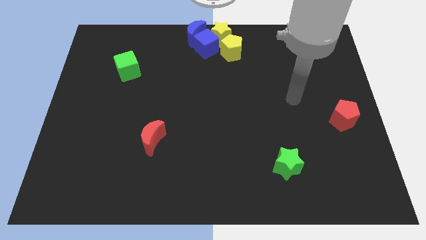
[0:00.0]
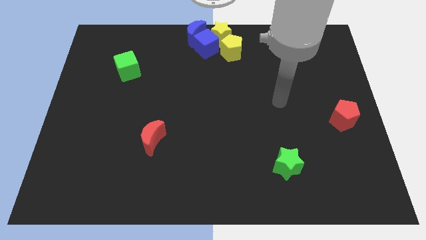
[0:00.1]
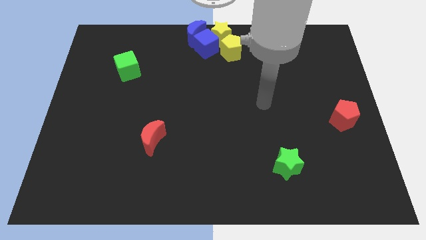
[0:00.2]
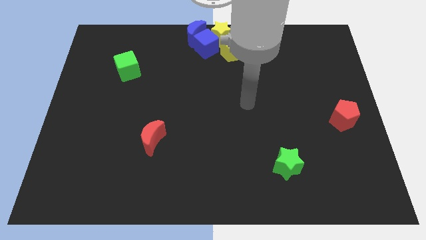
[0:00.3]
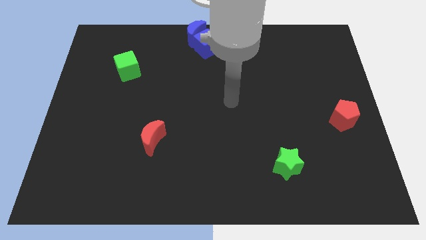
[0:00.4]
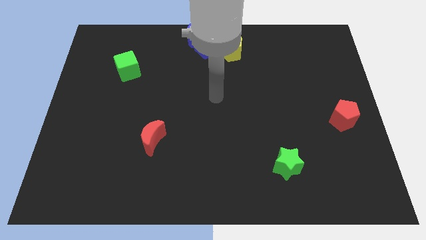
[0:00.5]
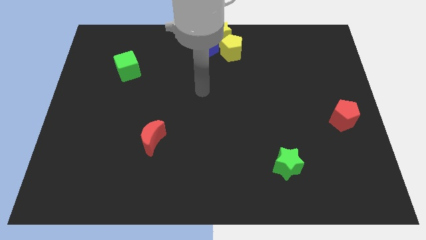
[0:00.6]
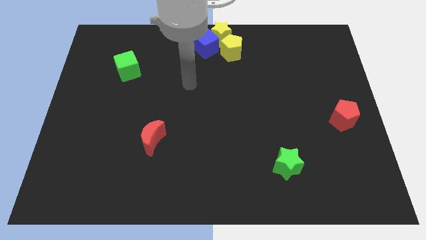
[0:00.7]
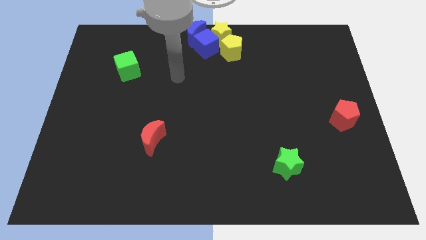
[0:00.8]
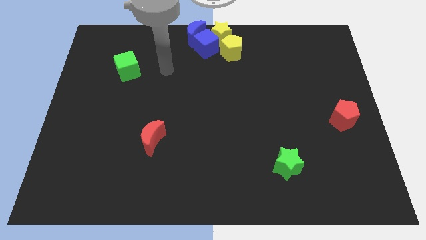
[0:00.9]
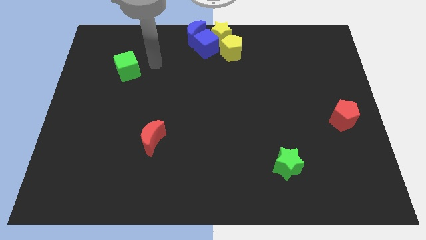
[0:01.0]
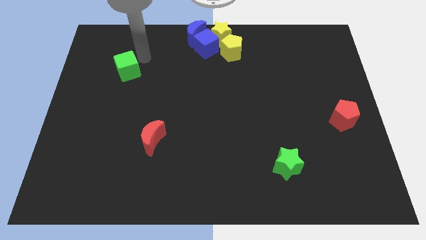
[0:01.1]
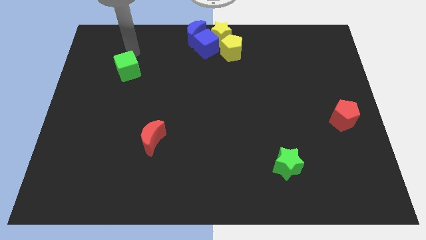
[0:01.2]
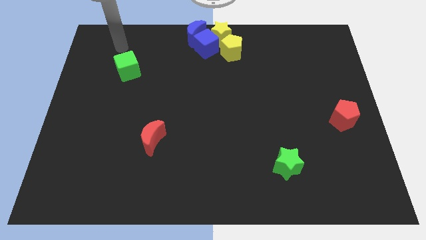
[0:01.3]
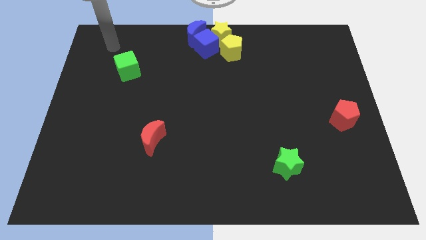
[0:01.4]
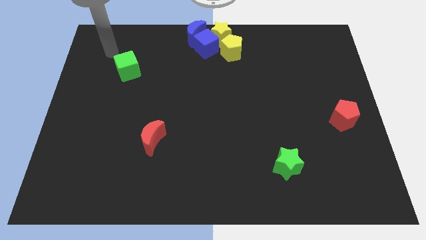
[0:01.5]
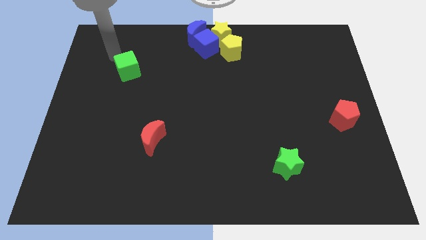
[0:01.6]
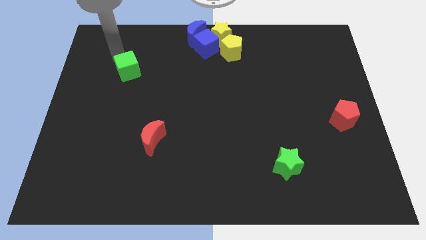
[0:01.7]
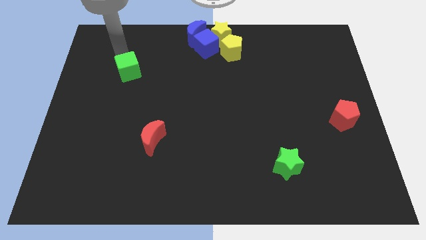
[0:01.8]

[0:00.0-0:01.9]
move your arm towards the green cube

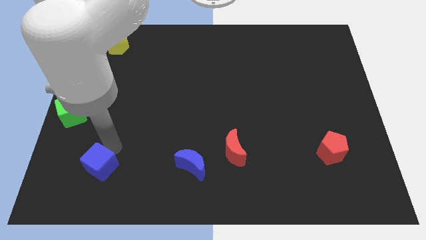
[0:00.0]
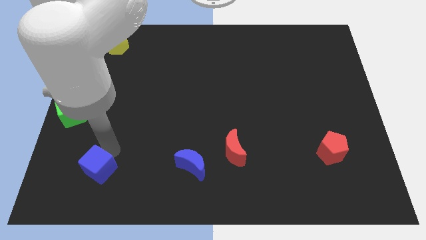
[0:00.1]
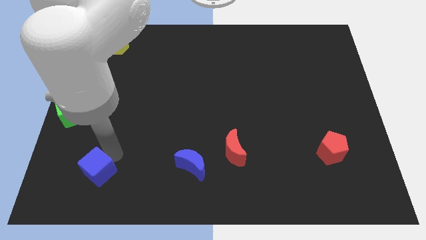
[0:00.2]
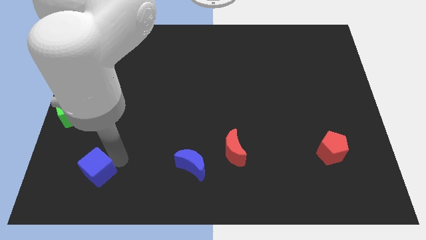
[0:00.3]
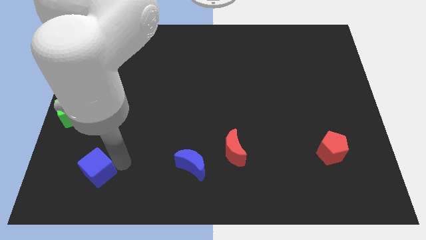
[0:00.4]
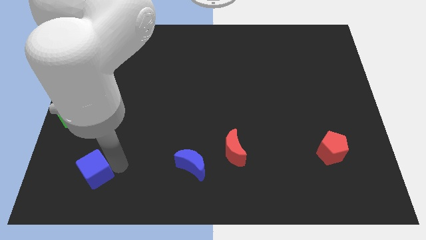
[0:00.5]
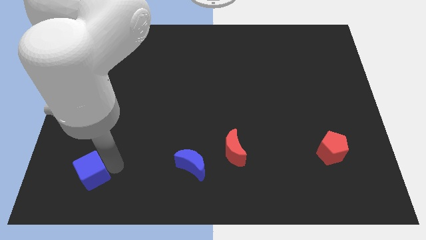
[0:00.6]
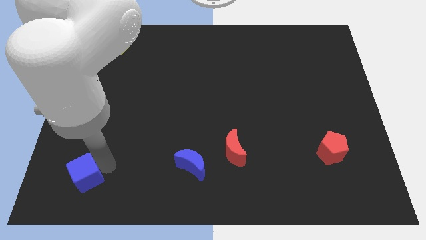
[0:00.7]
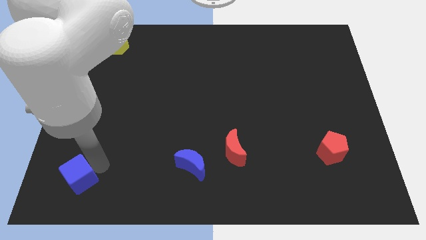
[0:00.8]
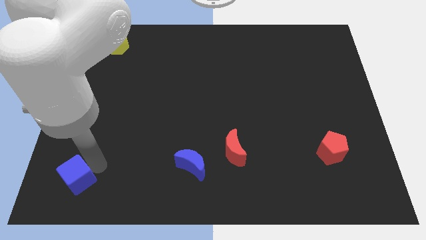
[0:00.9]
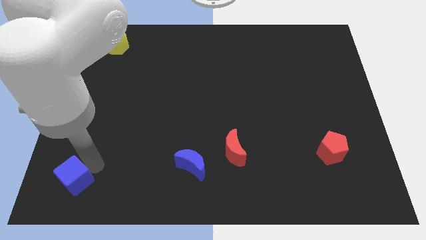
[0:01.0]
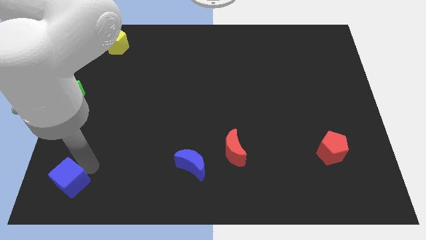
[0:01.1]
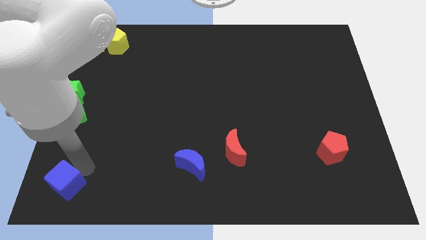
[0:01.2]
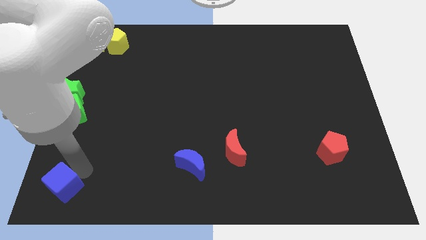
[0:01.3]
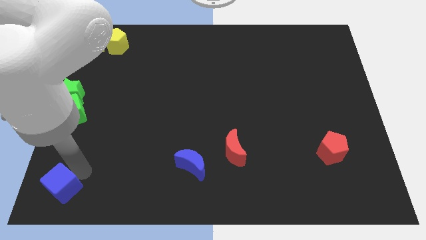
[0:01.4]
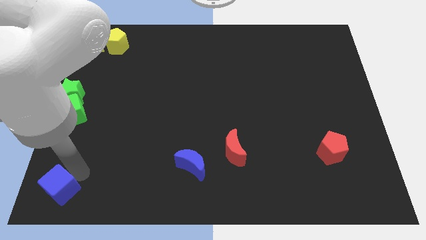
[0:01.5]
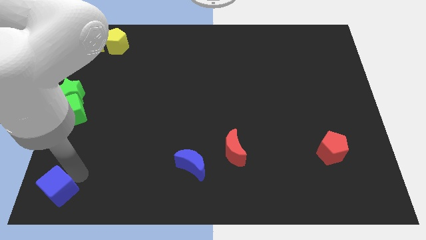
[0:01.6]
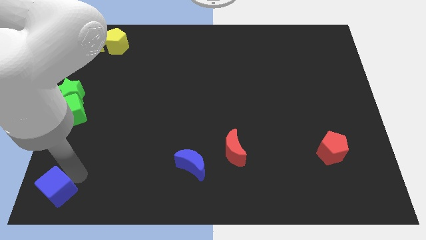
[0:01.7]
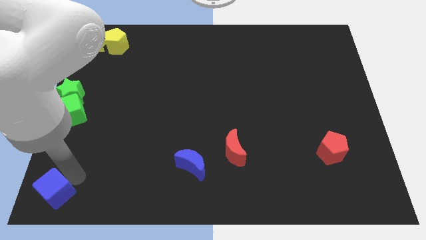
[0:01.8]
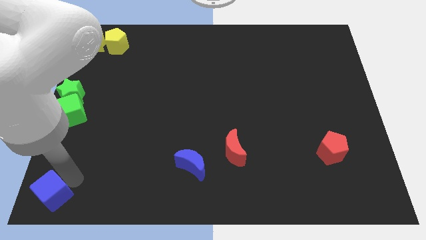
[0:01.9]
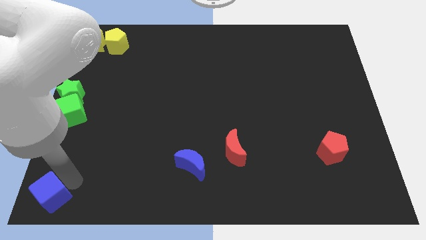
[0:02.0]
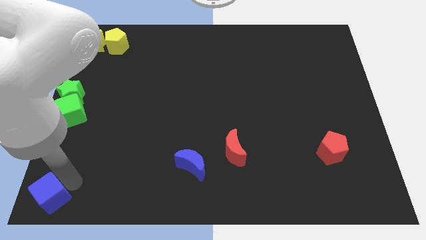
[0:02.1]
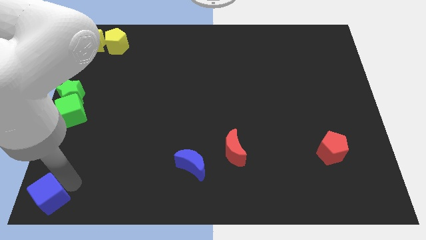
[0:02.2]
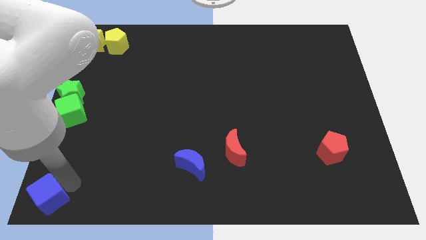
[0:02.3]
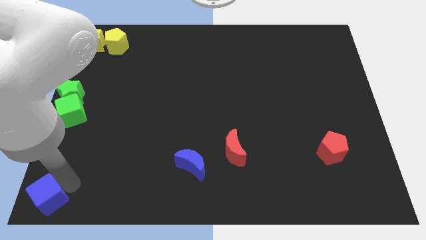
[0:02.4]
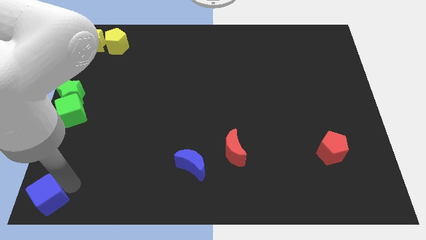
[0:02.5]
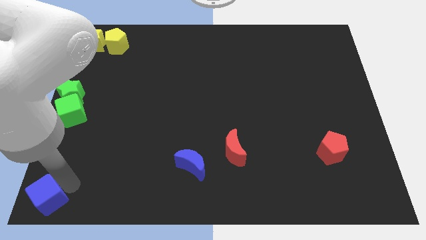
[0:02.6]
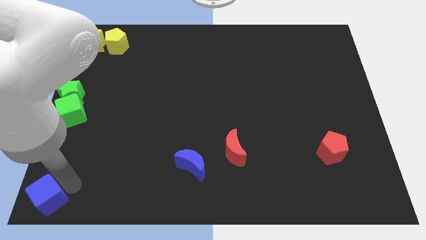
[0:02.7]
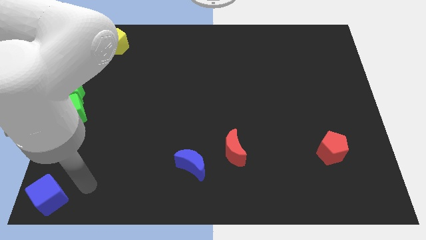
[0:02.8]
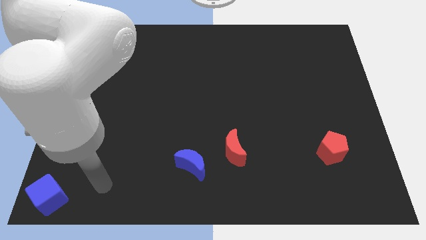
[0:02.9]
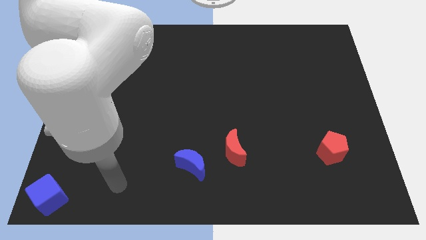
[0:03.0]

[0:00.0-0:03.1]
move the blue cube to the bottom left corner of the board

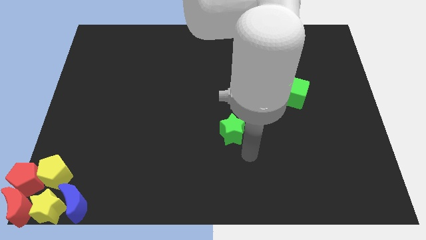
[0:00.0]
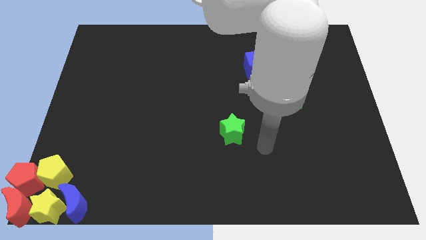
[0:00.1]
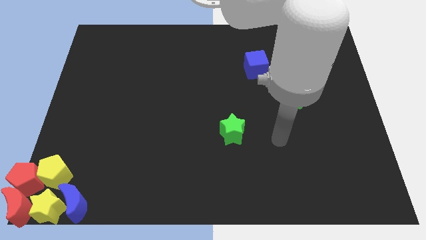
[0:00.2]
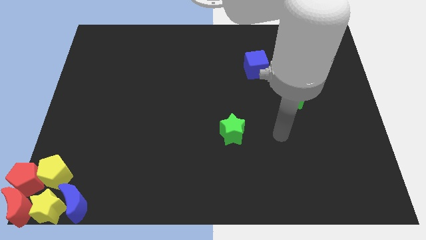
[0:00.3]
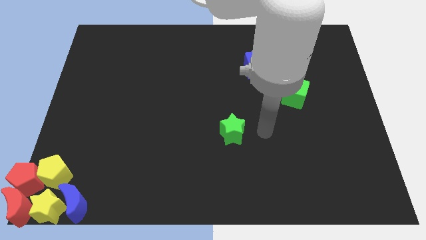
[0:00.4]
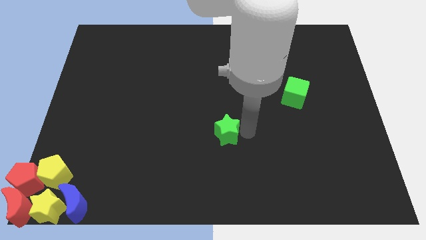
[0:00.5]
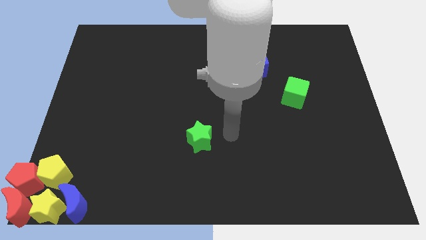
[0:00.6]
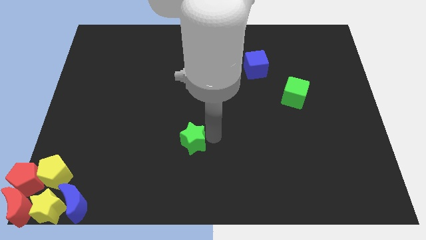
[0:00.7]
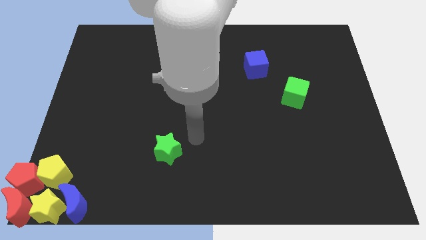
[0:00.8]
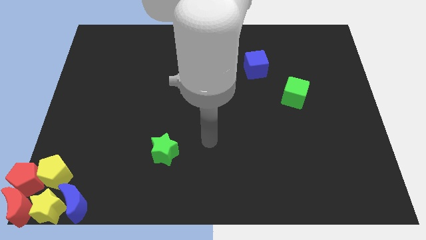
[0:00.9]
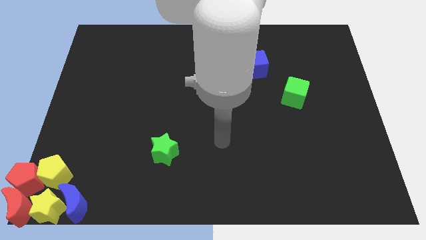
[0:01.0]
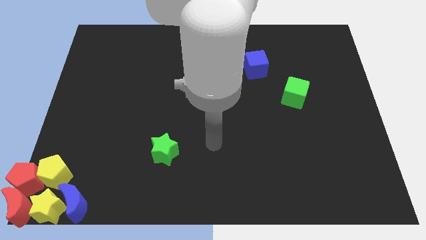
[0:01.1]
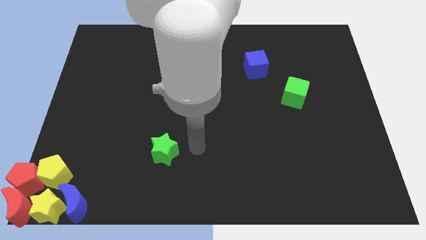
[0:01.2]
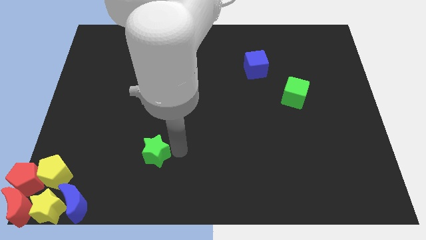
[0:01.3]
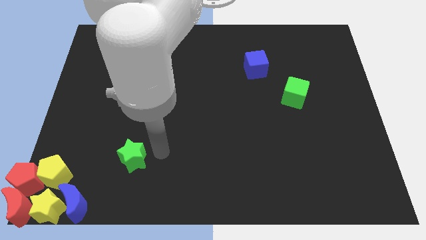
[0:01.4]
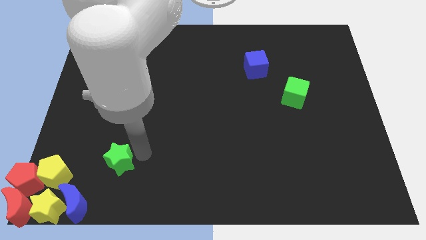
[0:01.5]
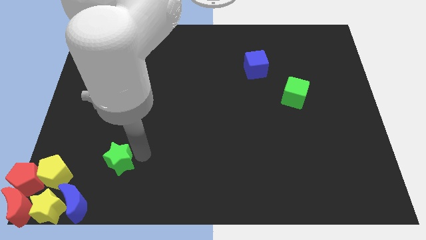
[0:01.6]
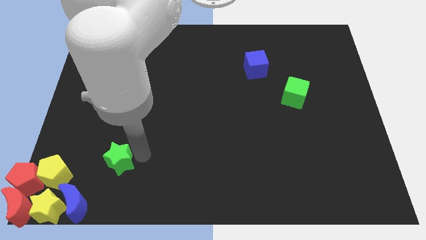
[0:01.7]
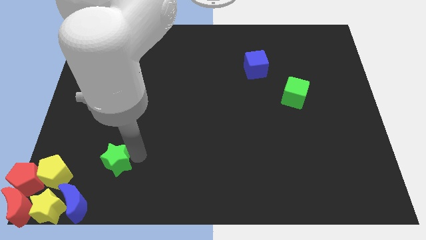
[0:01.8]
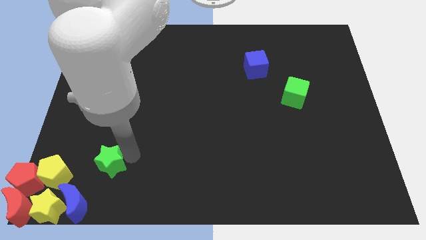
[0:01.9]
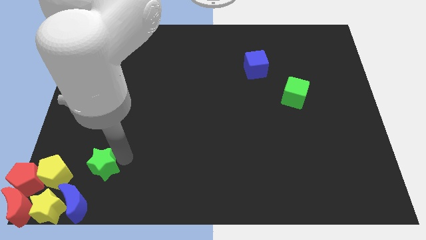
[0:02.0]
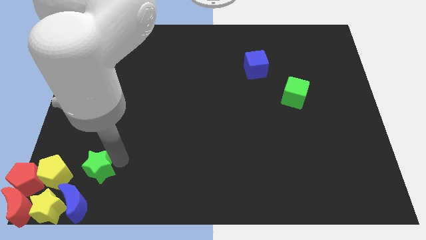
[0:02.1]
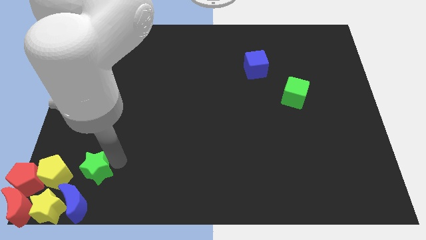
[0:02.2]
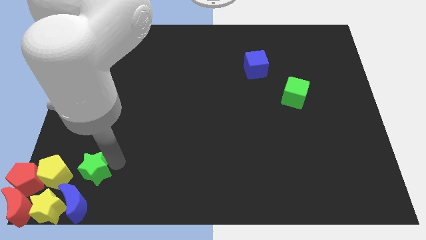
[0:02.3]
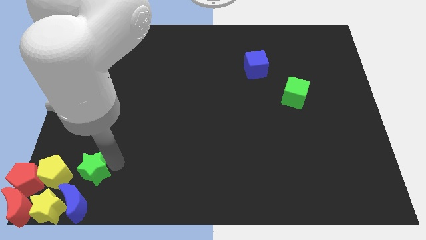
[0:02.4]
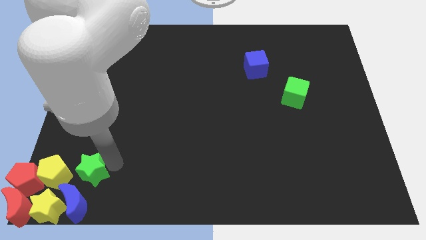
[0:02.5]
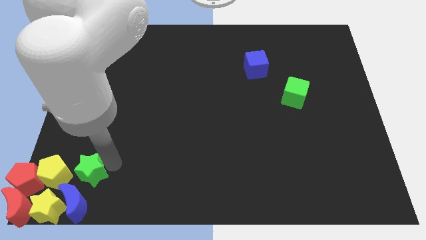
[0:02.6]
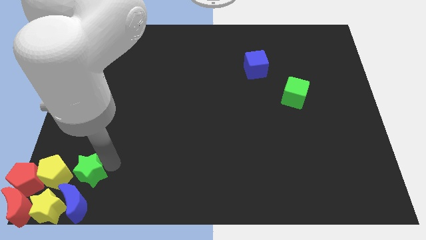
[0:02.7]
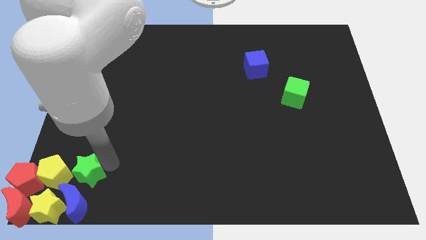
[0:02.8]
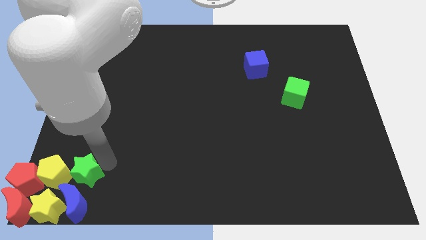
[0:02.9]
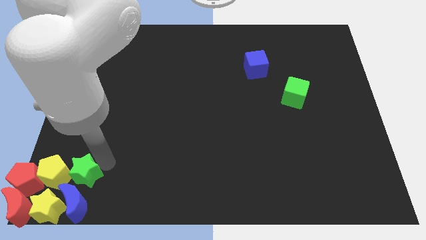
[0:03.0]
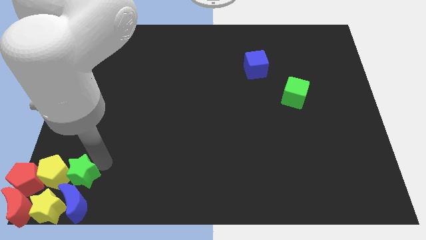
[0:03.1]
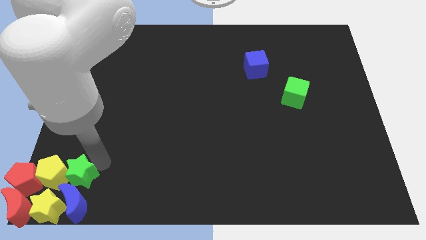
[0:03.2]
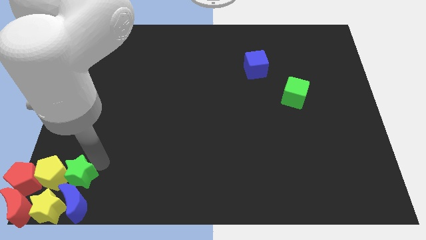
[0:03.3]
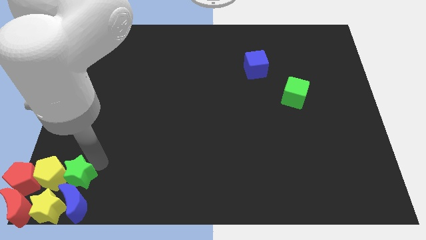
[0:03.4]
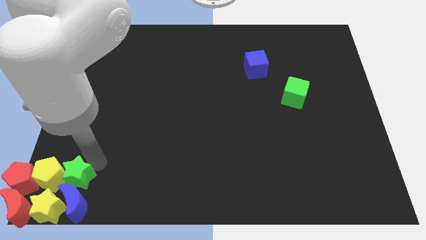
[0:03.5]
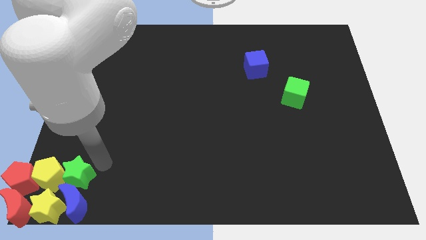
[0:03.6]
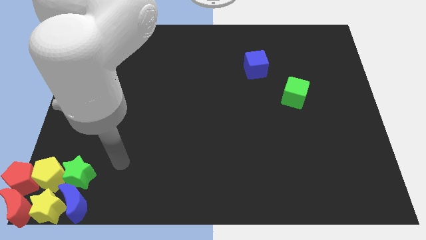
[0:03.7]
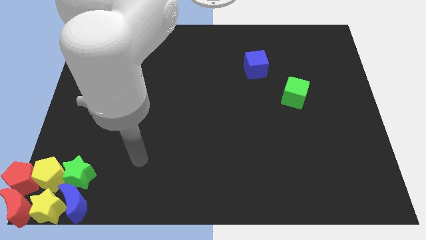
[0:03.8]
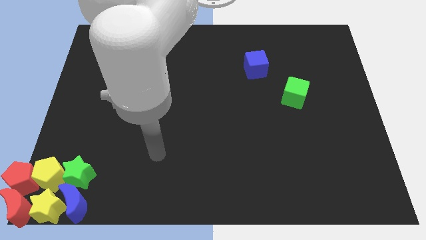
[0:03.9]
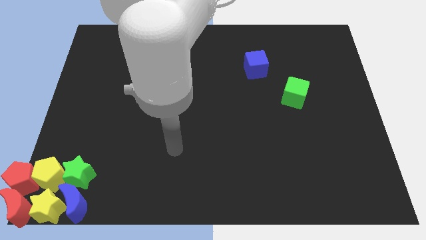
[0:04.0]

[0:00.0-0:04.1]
slide green star to the right of yellow pentagon
